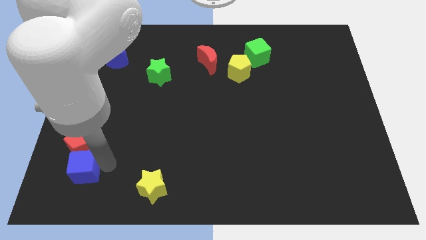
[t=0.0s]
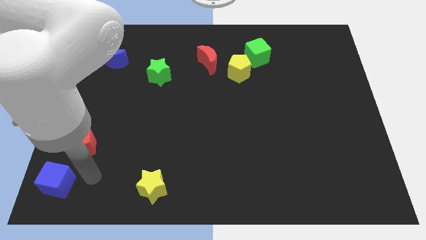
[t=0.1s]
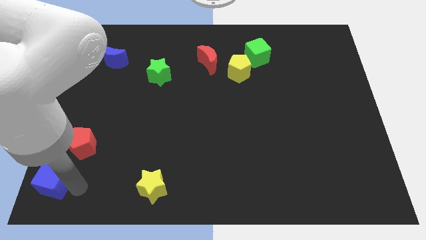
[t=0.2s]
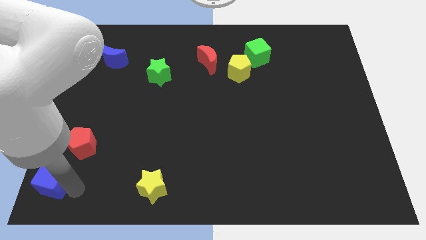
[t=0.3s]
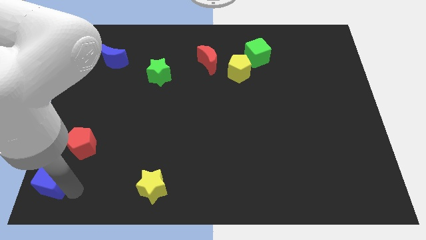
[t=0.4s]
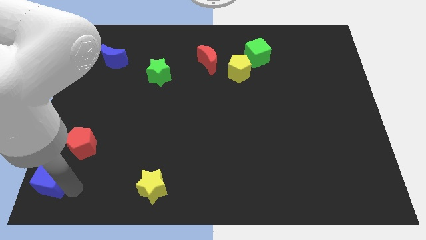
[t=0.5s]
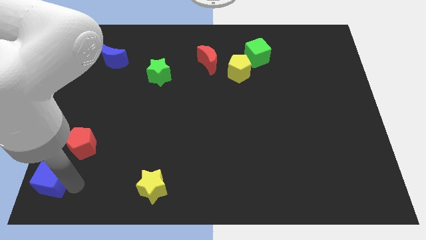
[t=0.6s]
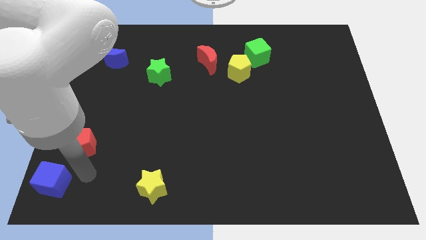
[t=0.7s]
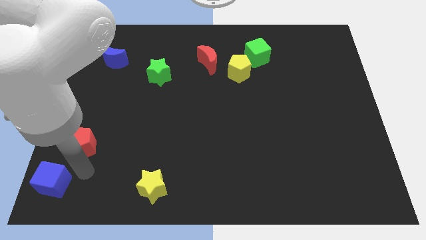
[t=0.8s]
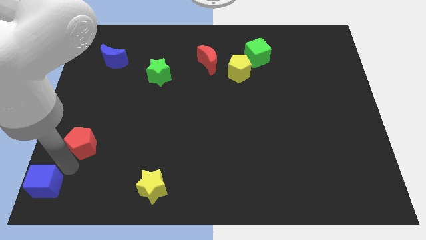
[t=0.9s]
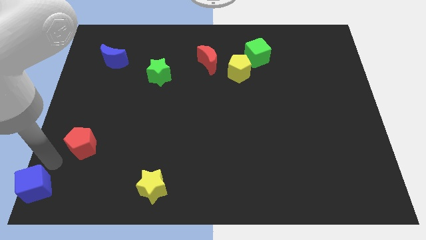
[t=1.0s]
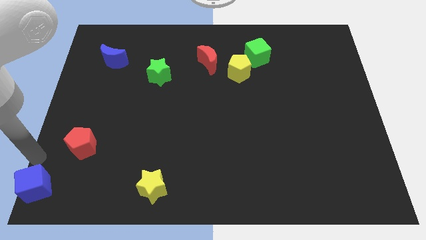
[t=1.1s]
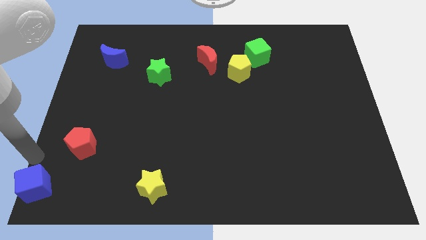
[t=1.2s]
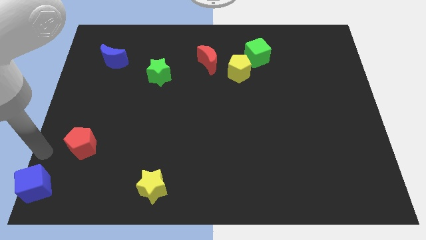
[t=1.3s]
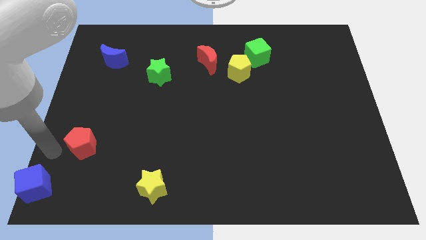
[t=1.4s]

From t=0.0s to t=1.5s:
slightly move the blue cube to the bottom left corner of the board

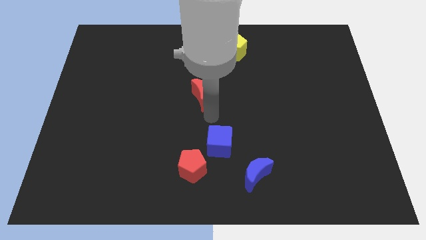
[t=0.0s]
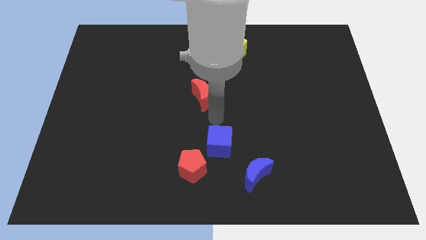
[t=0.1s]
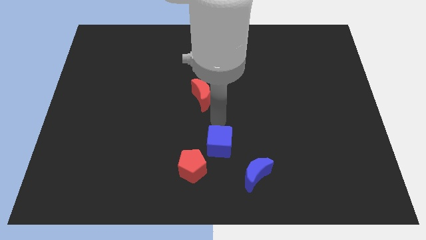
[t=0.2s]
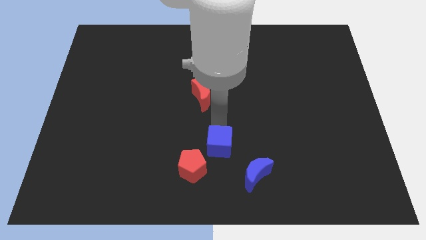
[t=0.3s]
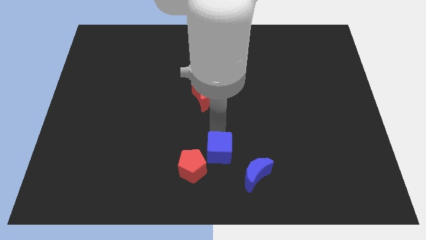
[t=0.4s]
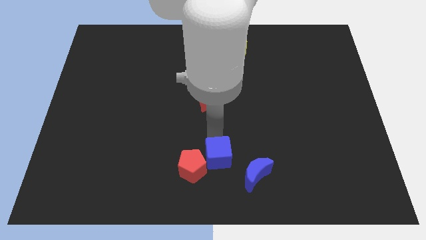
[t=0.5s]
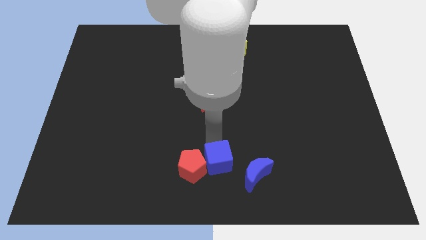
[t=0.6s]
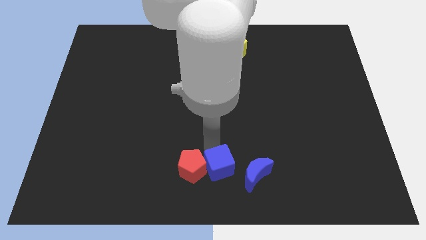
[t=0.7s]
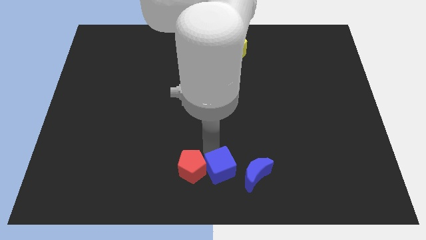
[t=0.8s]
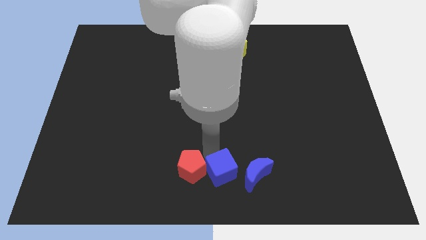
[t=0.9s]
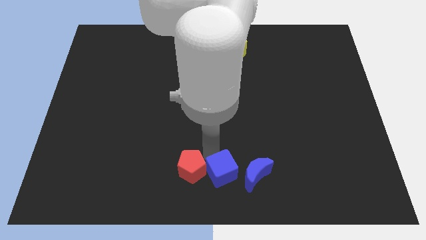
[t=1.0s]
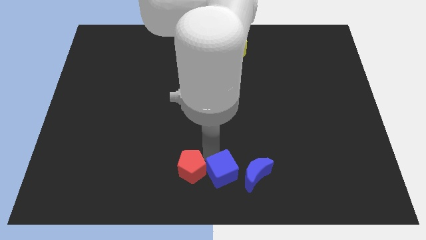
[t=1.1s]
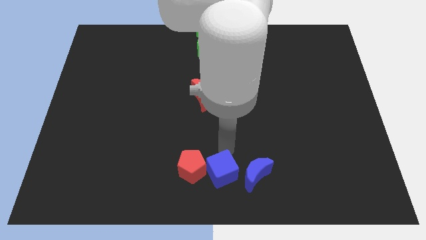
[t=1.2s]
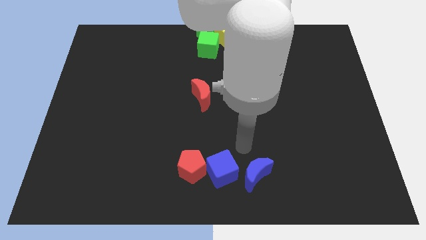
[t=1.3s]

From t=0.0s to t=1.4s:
place the blue cube right to the red pentagon

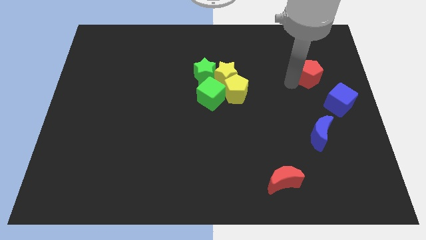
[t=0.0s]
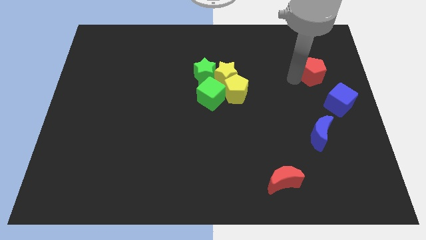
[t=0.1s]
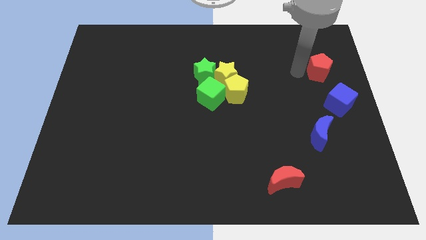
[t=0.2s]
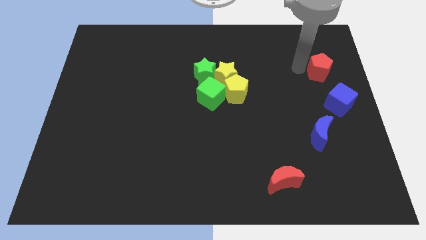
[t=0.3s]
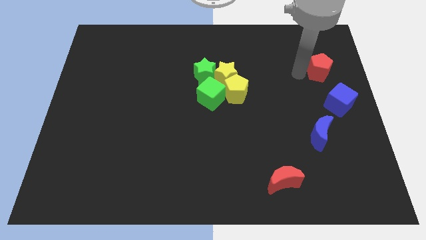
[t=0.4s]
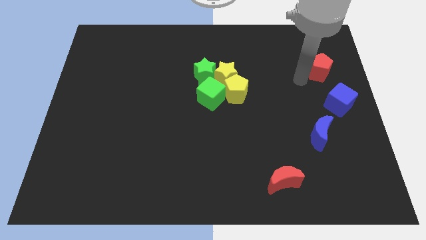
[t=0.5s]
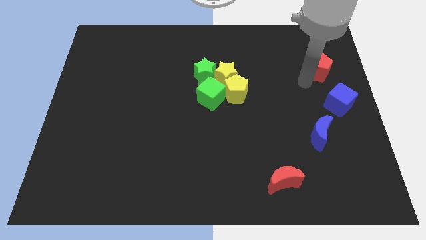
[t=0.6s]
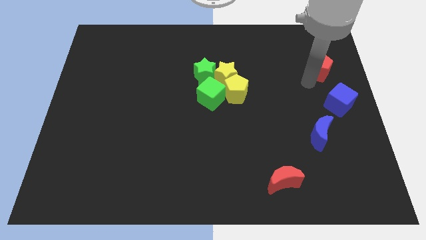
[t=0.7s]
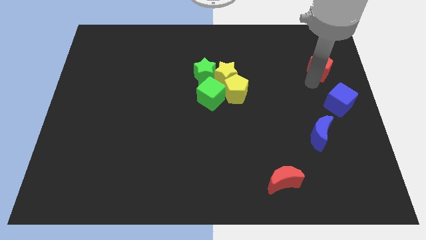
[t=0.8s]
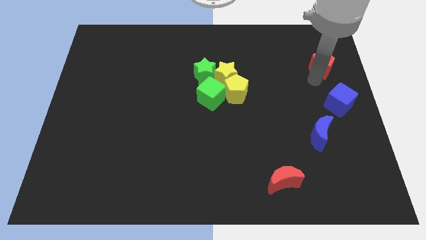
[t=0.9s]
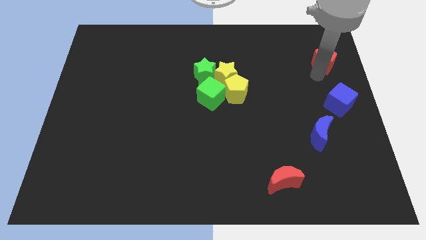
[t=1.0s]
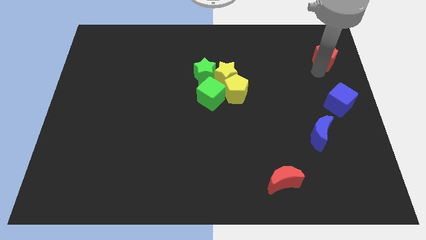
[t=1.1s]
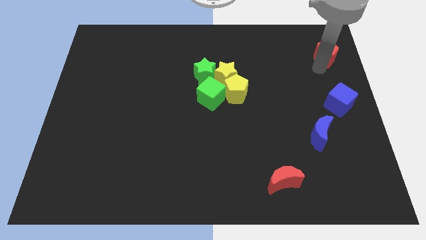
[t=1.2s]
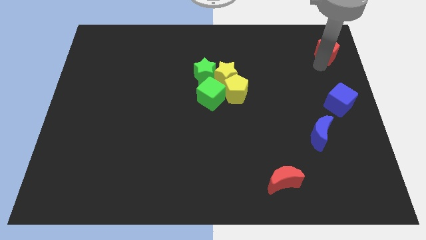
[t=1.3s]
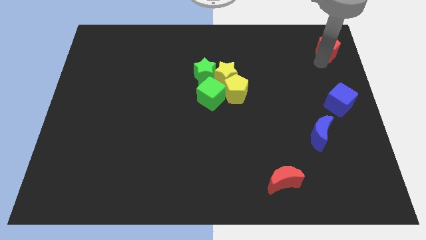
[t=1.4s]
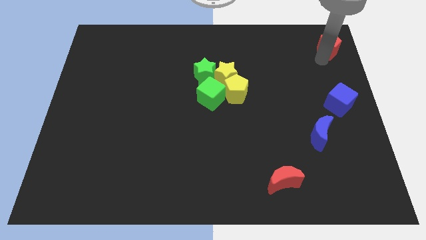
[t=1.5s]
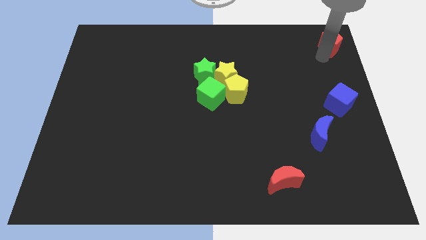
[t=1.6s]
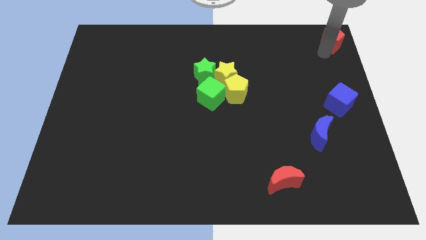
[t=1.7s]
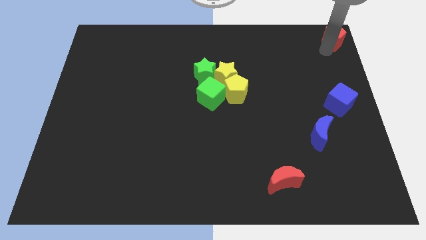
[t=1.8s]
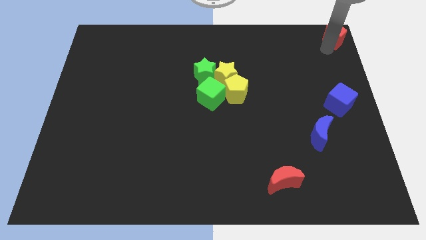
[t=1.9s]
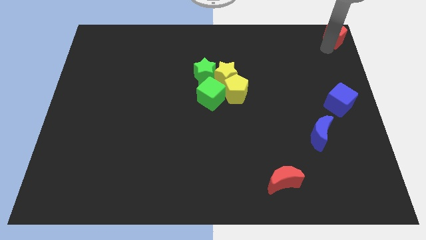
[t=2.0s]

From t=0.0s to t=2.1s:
push the red pentagon to the top right corner of the board

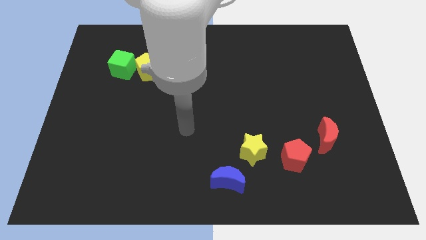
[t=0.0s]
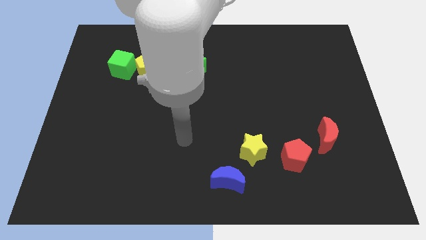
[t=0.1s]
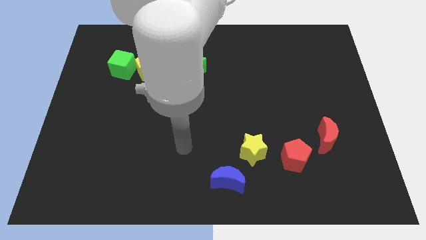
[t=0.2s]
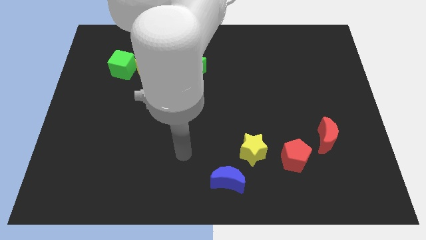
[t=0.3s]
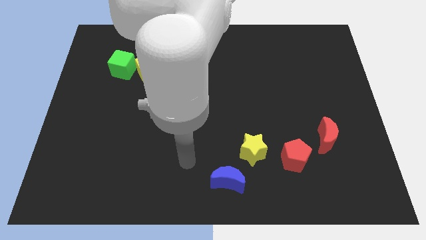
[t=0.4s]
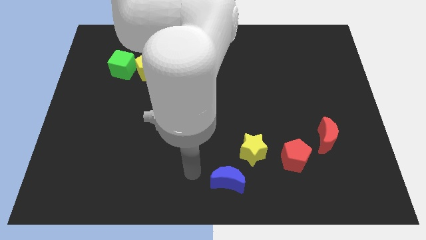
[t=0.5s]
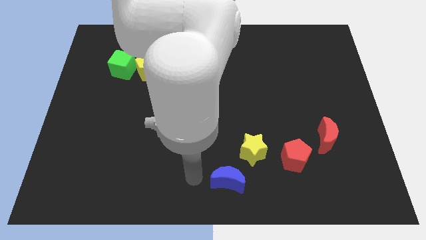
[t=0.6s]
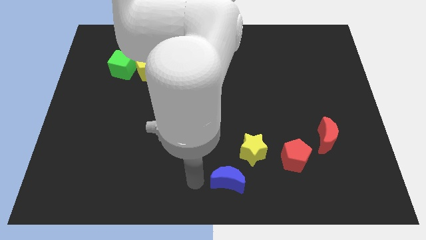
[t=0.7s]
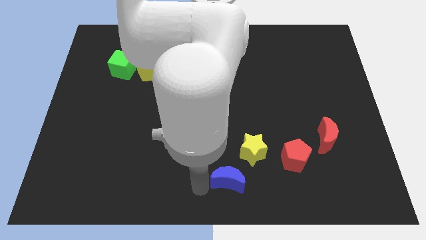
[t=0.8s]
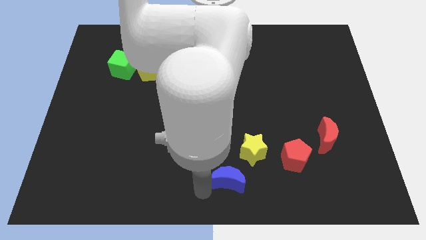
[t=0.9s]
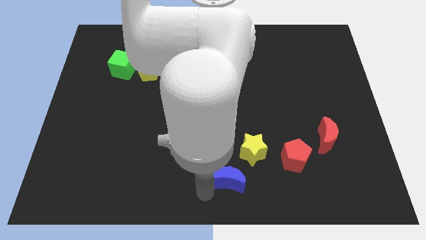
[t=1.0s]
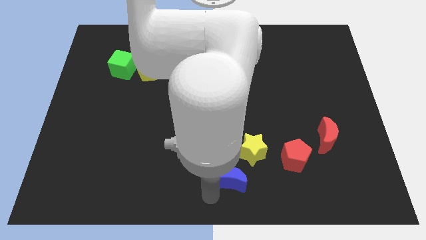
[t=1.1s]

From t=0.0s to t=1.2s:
move your arm below the blue moon

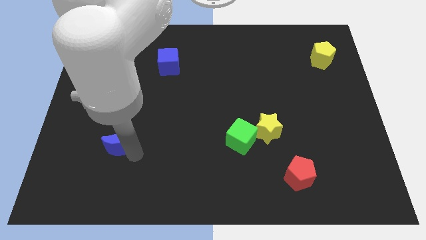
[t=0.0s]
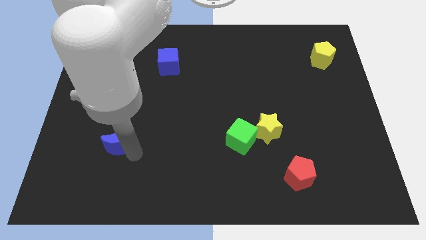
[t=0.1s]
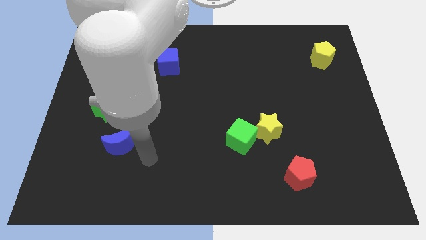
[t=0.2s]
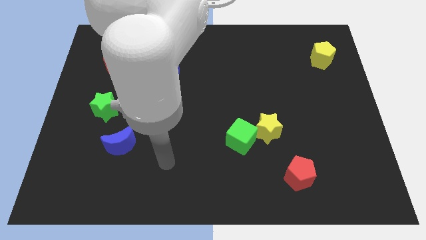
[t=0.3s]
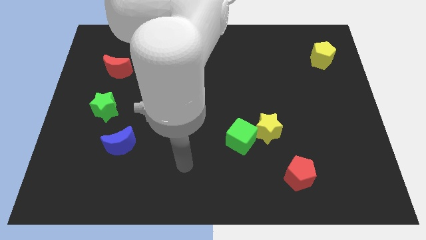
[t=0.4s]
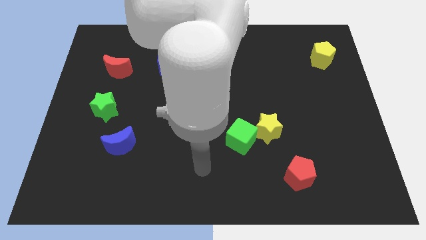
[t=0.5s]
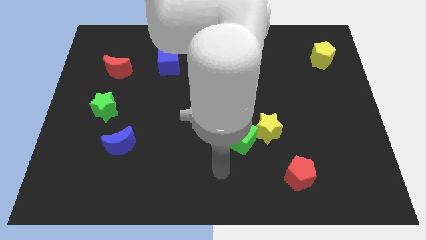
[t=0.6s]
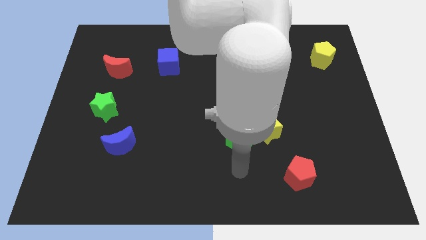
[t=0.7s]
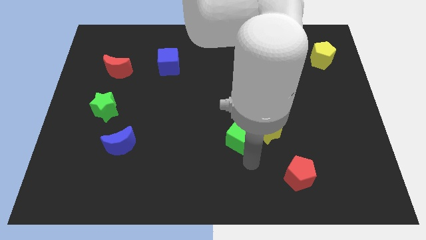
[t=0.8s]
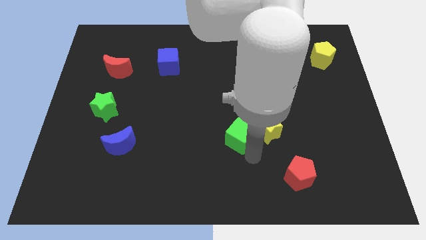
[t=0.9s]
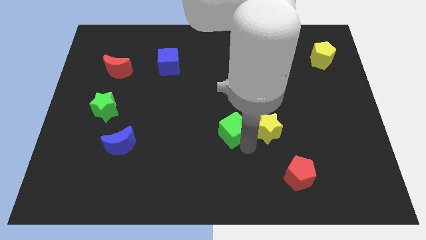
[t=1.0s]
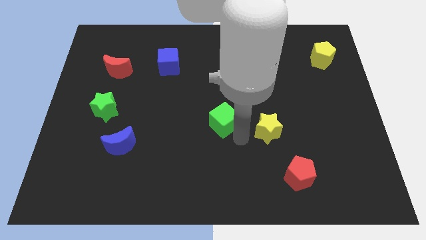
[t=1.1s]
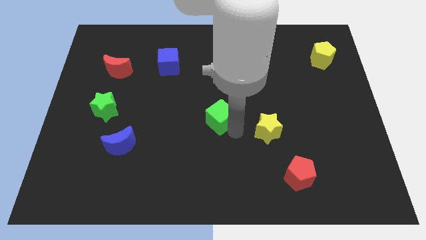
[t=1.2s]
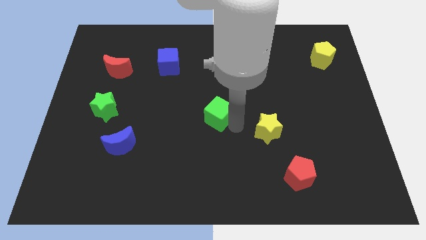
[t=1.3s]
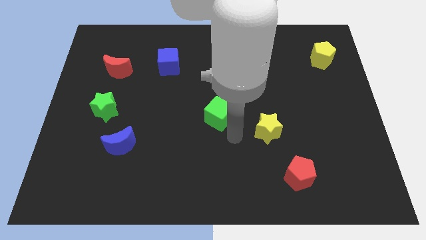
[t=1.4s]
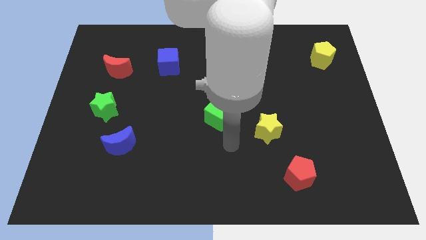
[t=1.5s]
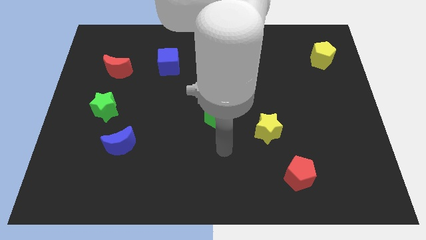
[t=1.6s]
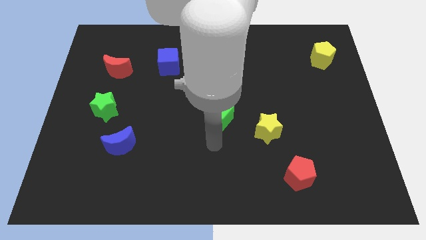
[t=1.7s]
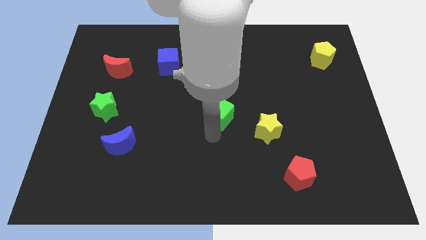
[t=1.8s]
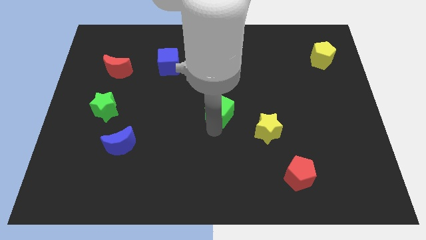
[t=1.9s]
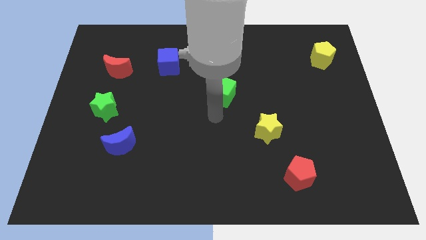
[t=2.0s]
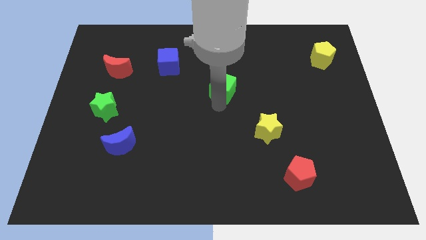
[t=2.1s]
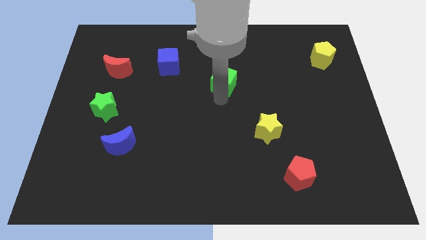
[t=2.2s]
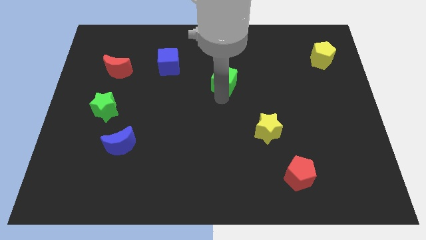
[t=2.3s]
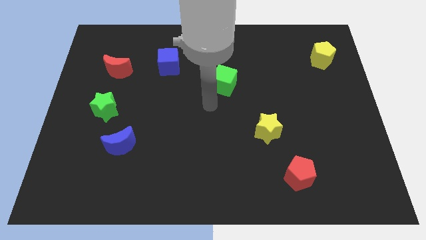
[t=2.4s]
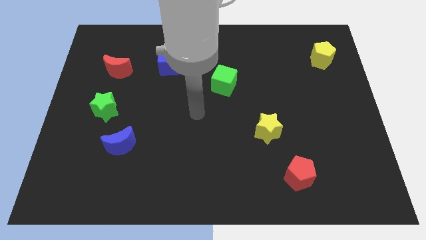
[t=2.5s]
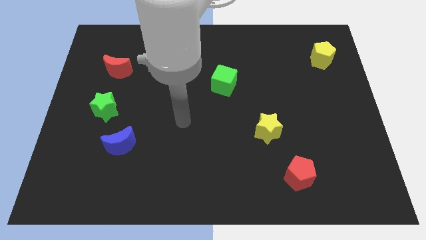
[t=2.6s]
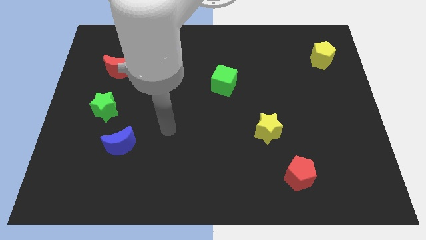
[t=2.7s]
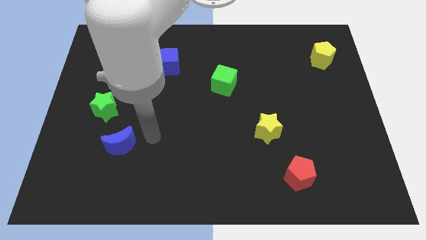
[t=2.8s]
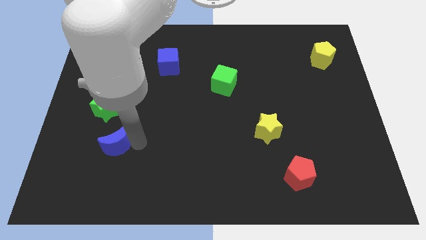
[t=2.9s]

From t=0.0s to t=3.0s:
push the green cube towards top center of the board
